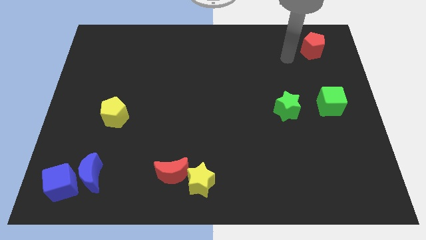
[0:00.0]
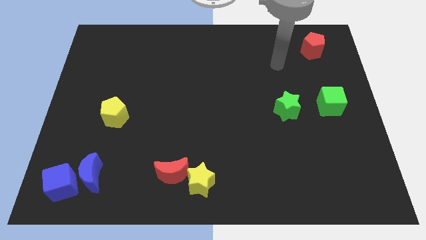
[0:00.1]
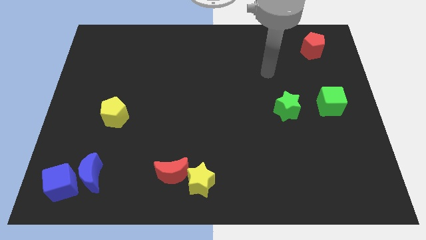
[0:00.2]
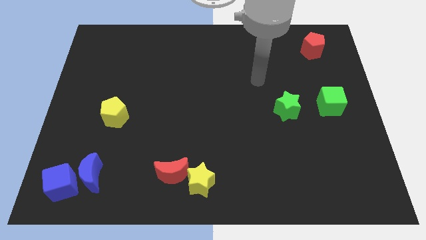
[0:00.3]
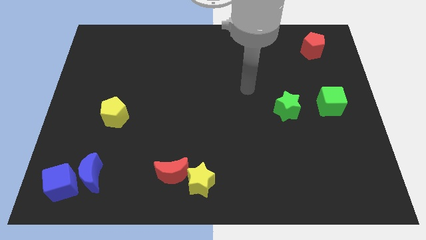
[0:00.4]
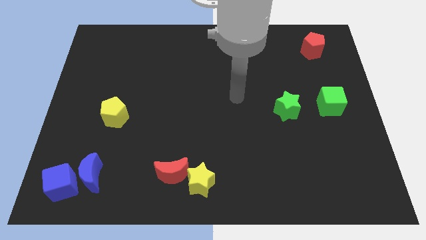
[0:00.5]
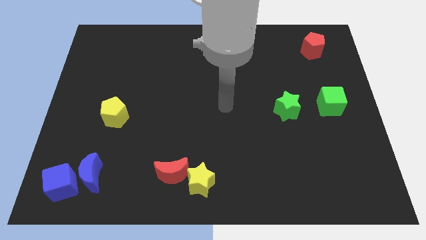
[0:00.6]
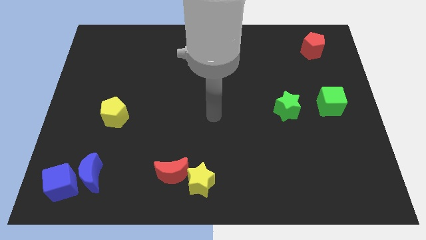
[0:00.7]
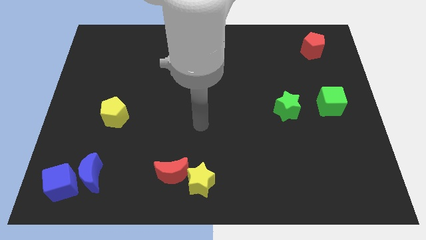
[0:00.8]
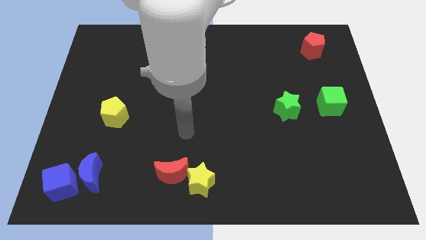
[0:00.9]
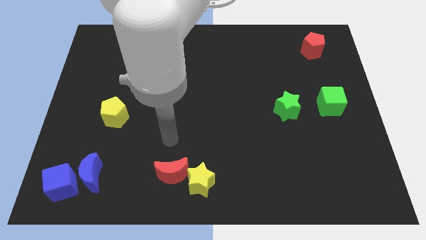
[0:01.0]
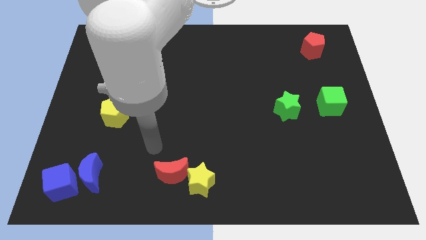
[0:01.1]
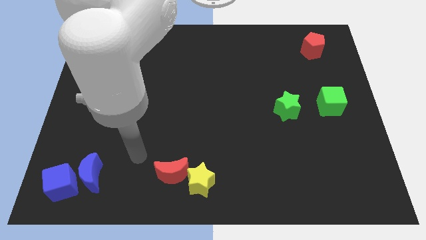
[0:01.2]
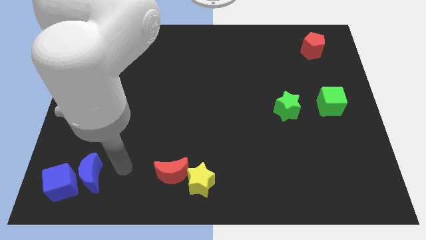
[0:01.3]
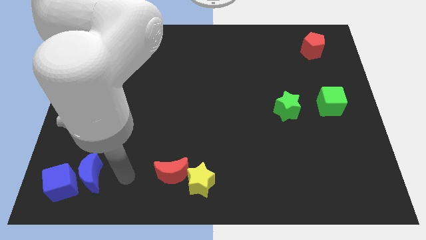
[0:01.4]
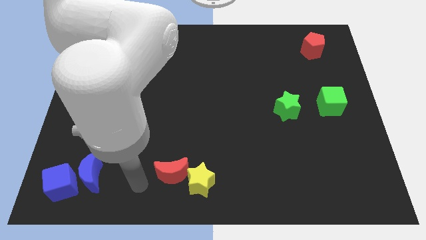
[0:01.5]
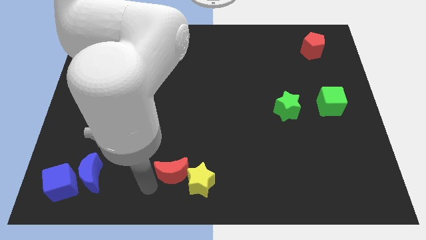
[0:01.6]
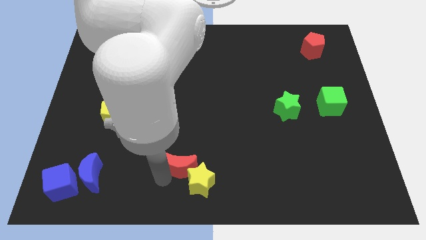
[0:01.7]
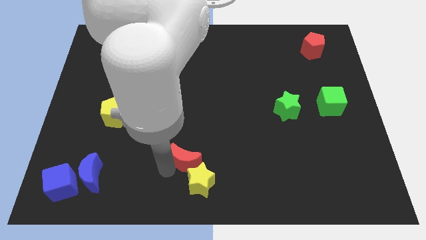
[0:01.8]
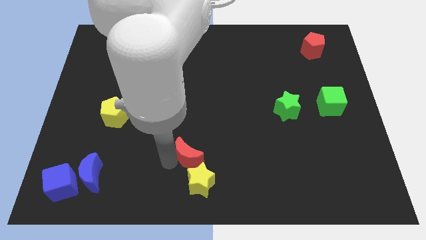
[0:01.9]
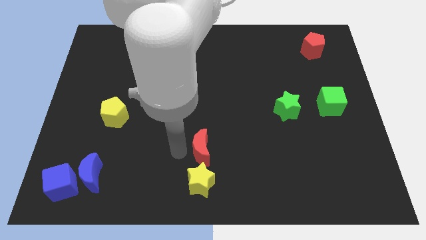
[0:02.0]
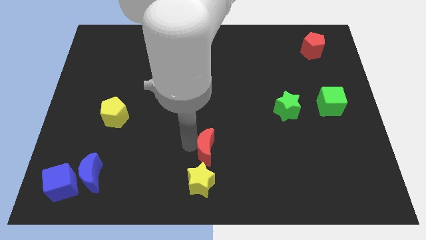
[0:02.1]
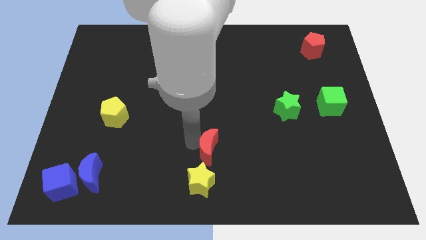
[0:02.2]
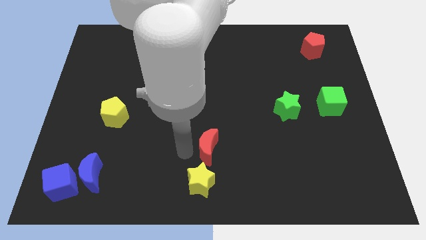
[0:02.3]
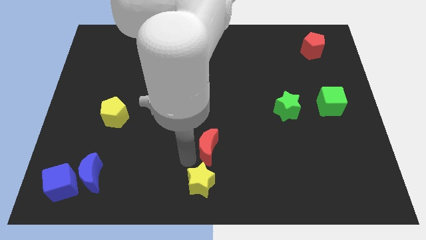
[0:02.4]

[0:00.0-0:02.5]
place the red moon above the yellow star

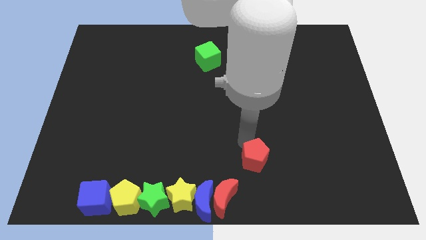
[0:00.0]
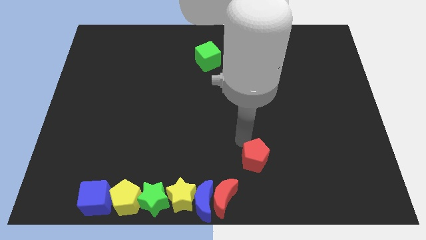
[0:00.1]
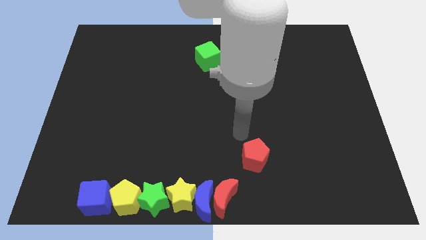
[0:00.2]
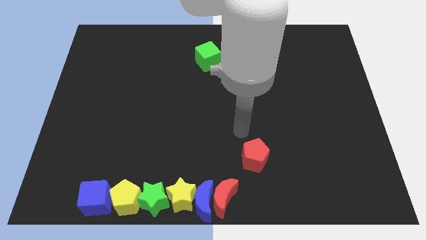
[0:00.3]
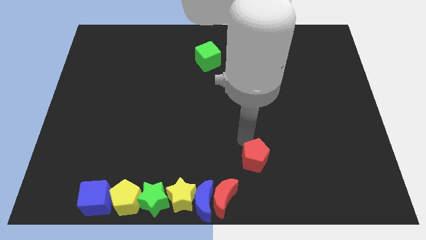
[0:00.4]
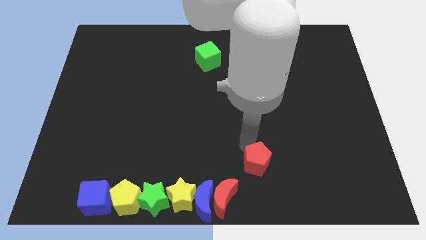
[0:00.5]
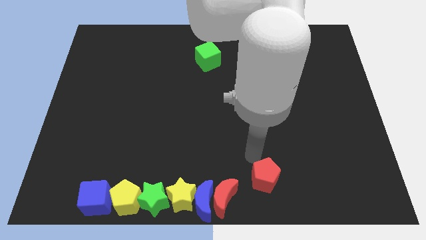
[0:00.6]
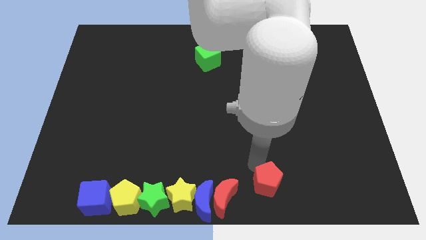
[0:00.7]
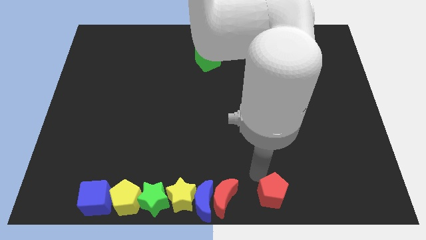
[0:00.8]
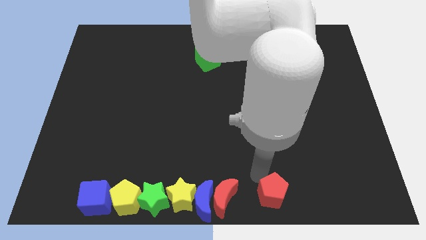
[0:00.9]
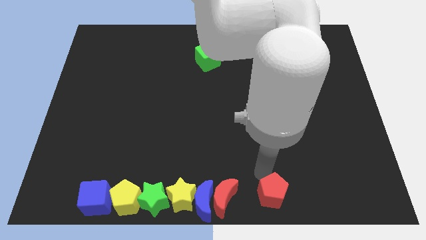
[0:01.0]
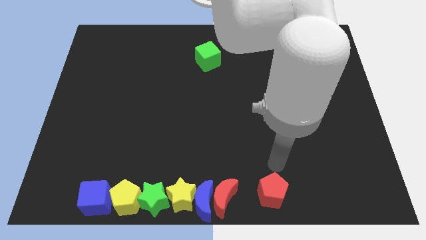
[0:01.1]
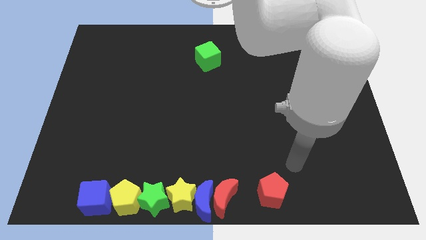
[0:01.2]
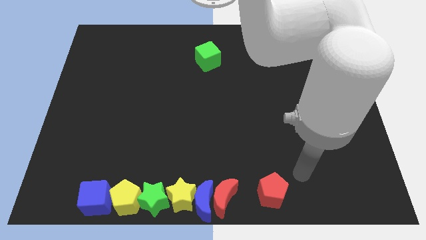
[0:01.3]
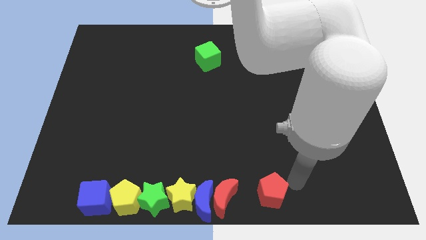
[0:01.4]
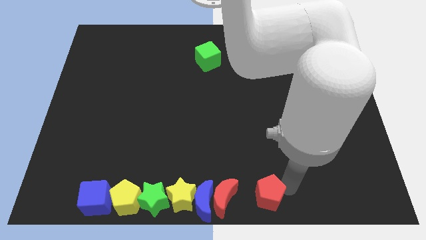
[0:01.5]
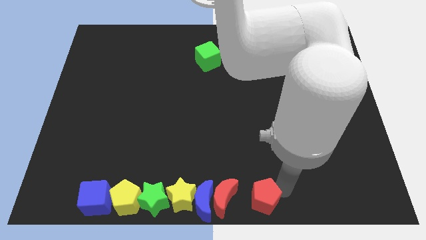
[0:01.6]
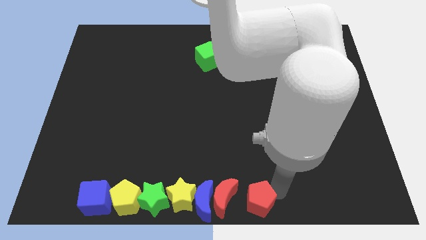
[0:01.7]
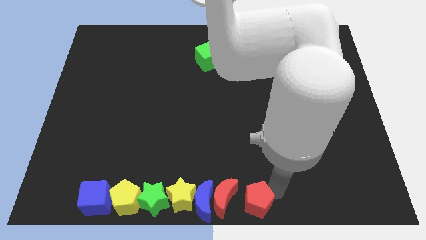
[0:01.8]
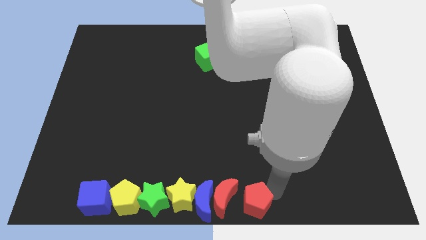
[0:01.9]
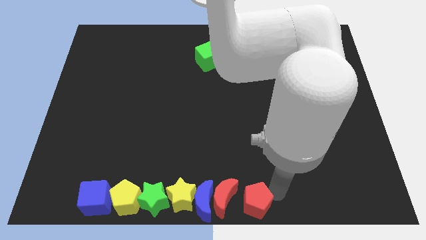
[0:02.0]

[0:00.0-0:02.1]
push the red pentagon to the right of the red crescent

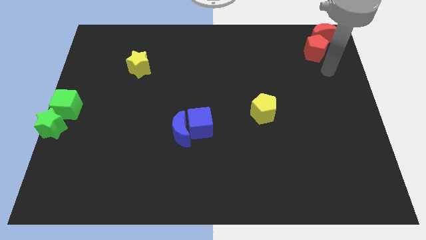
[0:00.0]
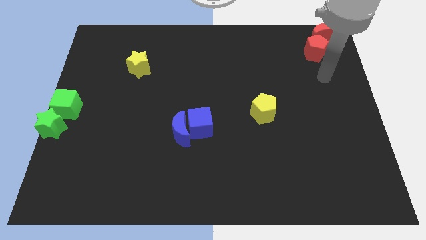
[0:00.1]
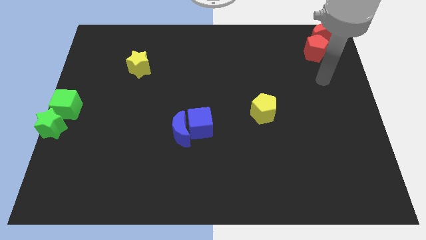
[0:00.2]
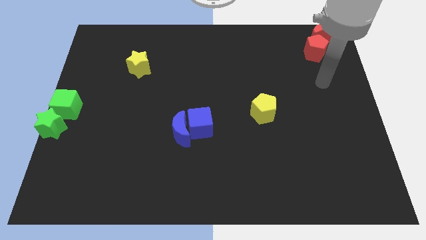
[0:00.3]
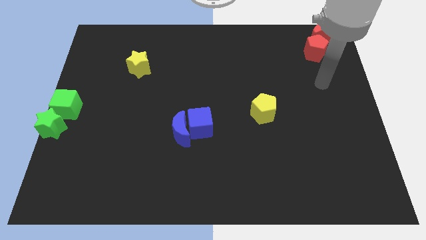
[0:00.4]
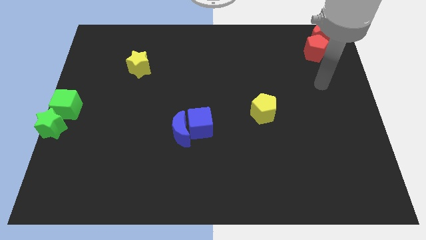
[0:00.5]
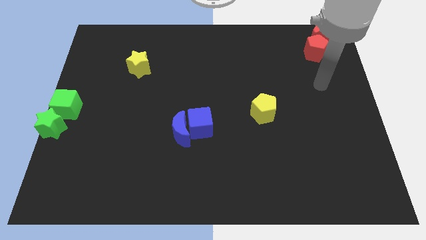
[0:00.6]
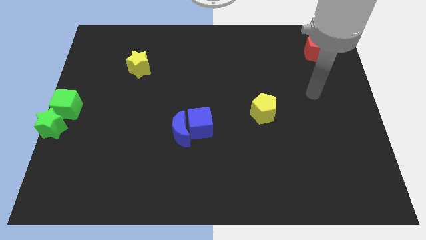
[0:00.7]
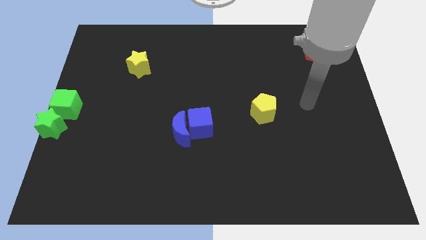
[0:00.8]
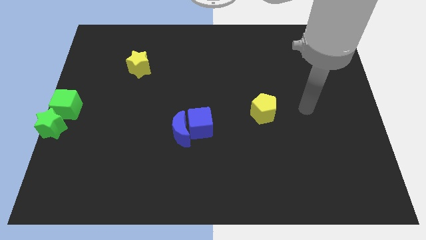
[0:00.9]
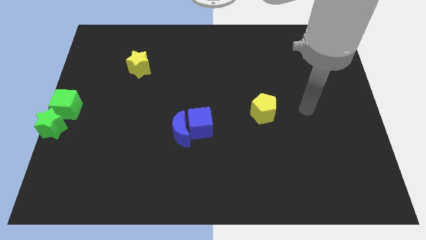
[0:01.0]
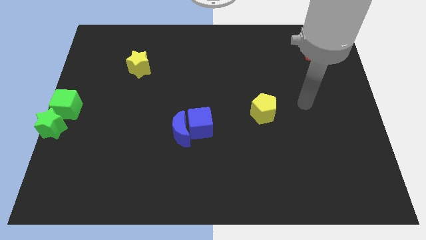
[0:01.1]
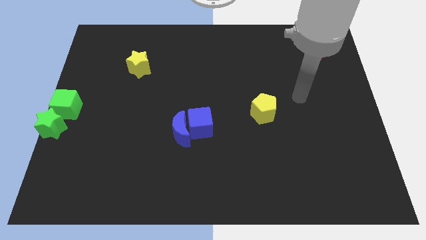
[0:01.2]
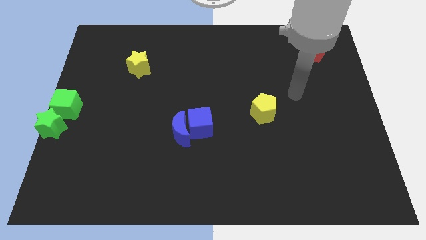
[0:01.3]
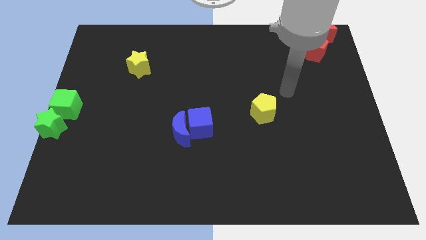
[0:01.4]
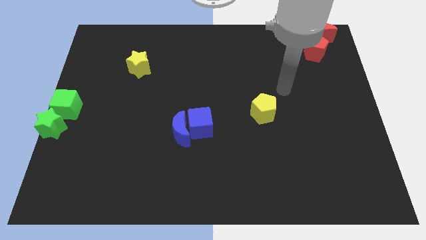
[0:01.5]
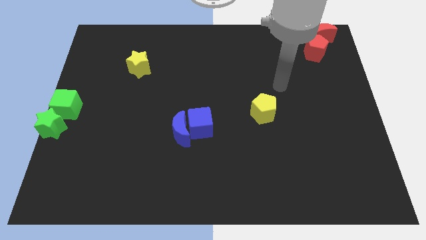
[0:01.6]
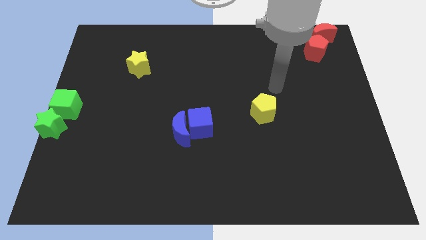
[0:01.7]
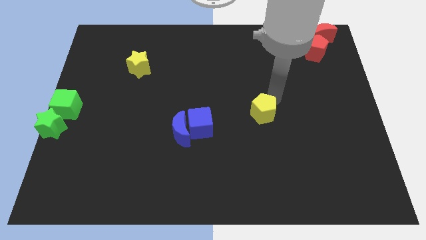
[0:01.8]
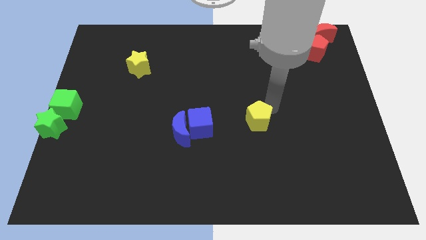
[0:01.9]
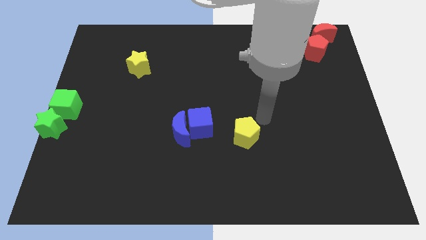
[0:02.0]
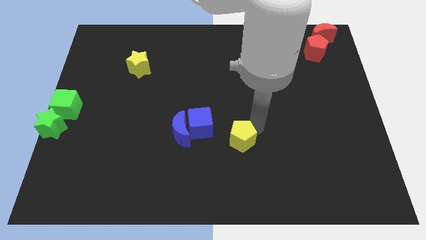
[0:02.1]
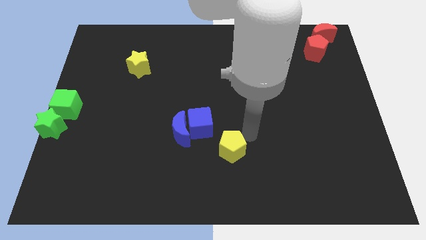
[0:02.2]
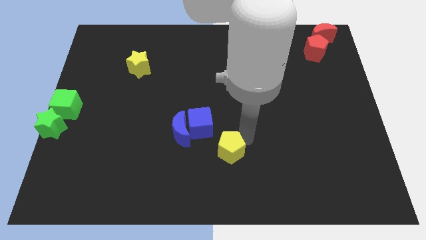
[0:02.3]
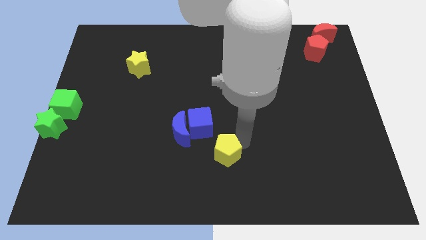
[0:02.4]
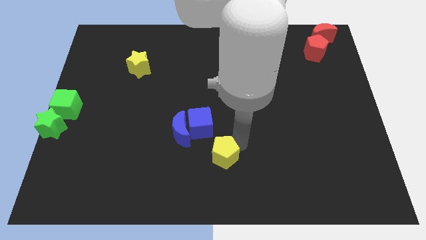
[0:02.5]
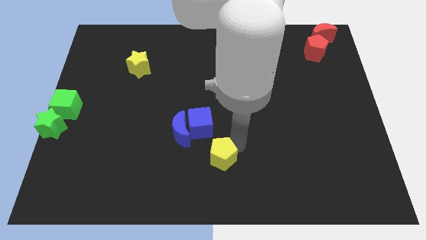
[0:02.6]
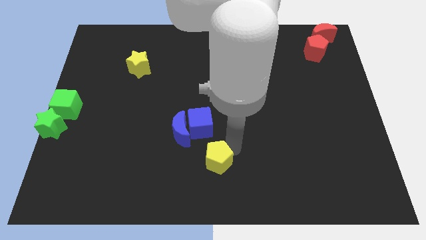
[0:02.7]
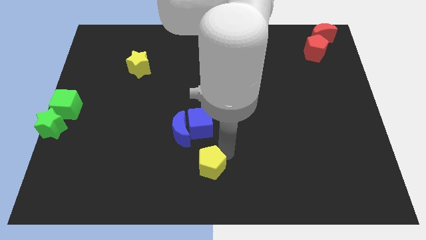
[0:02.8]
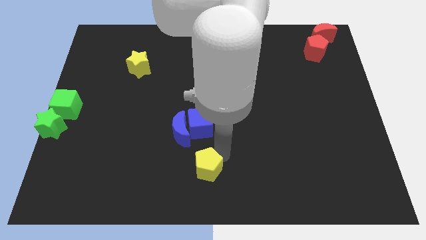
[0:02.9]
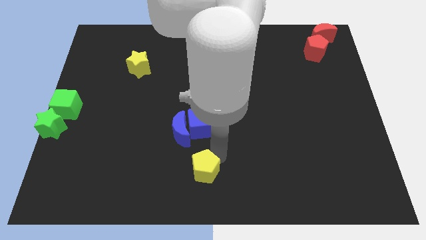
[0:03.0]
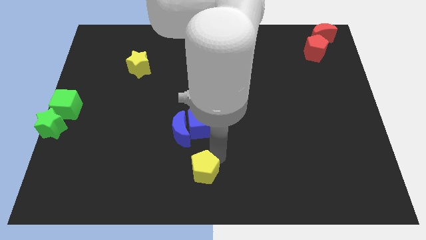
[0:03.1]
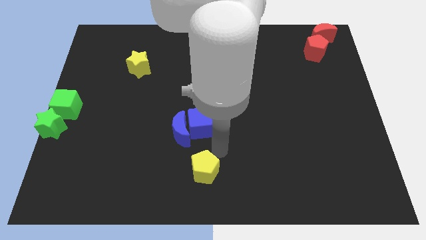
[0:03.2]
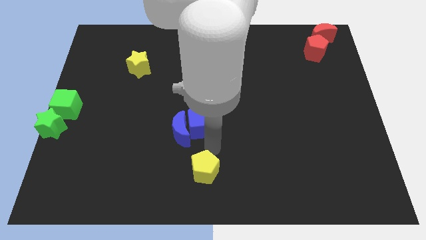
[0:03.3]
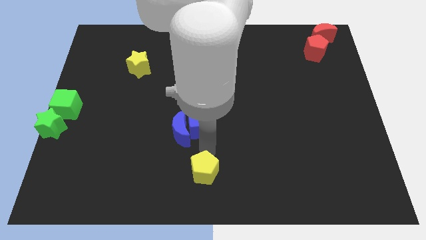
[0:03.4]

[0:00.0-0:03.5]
put the yellow pentagon below the group of blue blocks

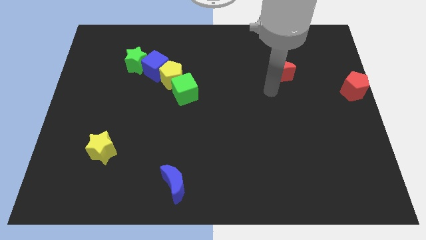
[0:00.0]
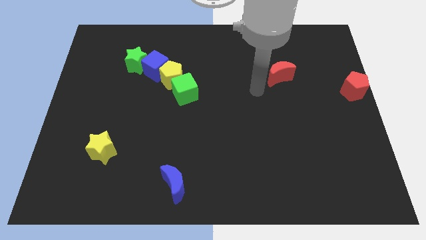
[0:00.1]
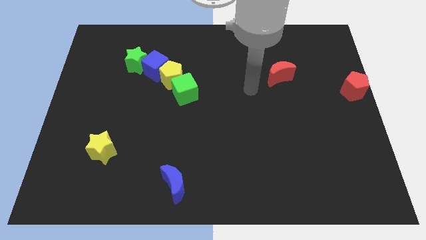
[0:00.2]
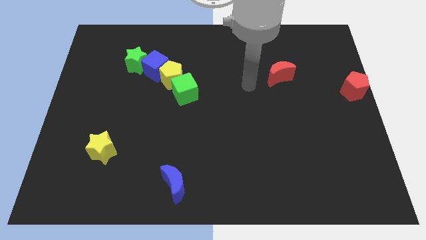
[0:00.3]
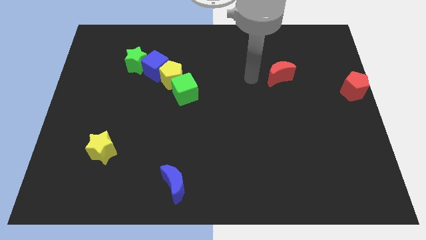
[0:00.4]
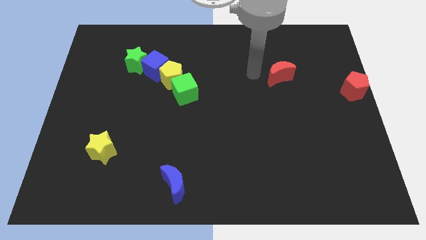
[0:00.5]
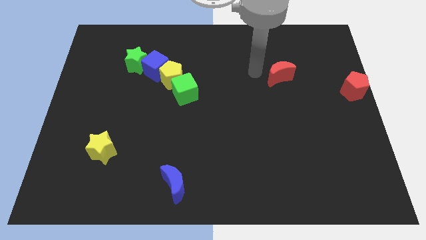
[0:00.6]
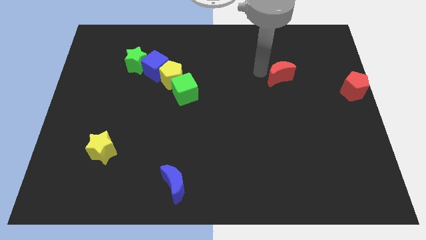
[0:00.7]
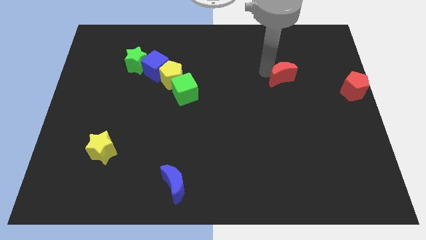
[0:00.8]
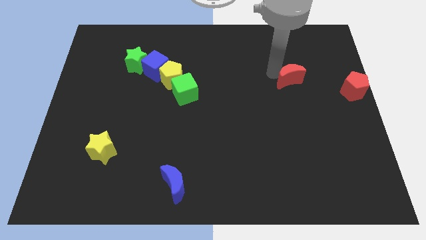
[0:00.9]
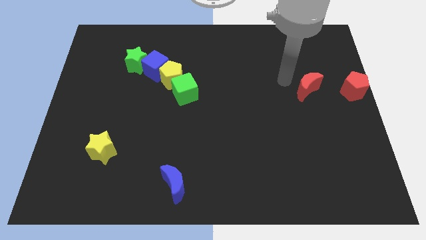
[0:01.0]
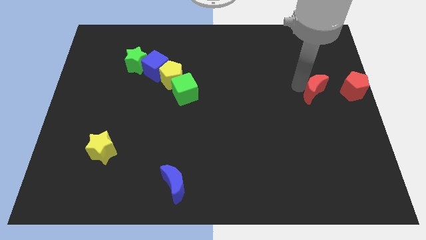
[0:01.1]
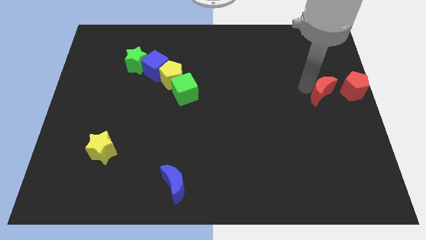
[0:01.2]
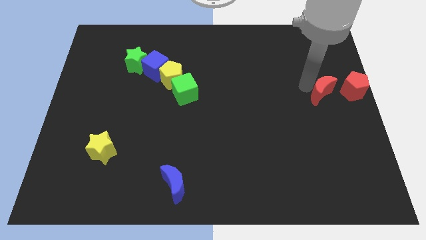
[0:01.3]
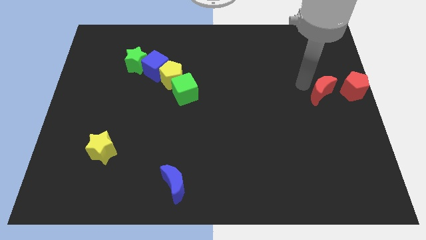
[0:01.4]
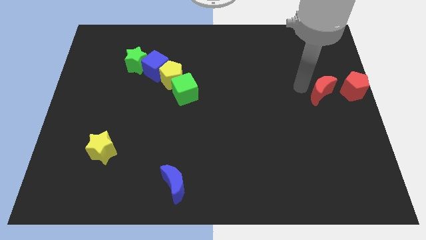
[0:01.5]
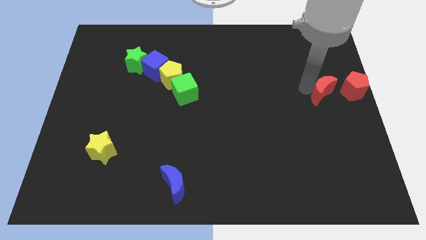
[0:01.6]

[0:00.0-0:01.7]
slide the red moon close to the red pentagon
